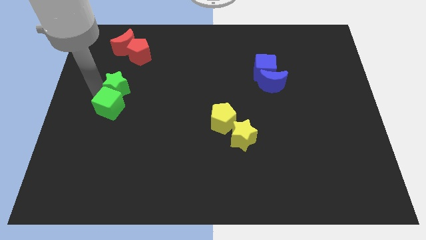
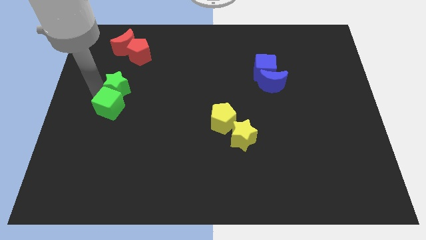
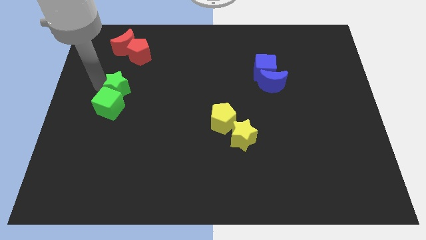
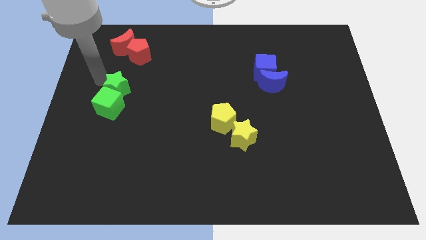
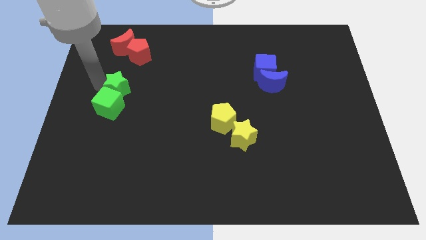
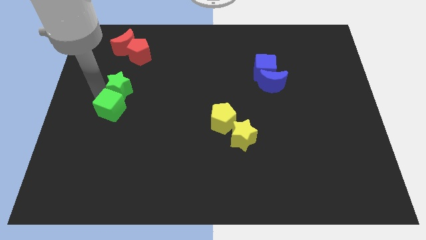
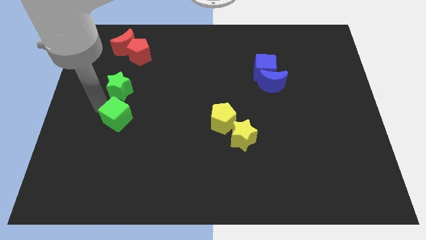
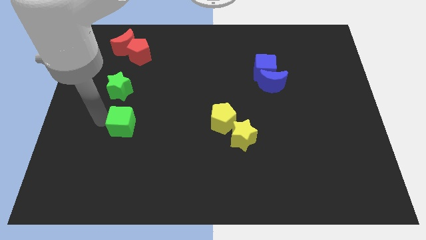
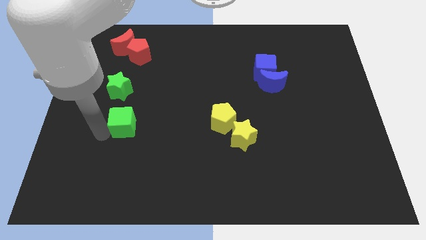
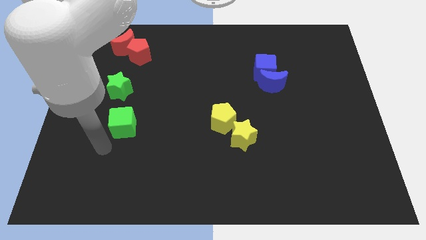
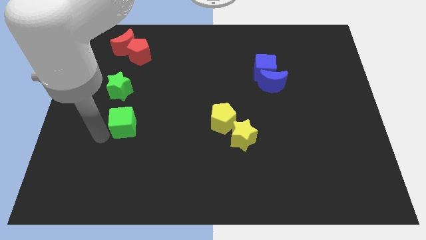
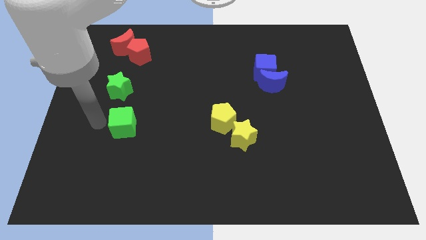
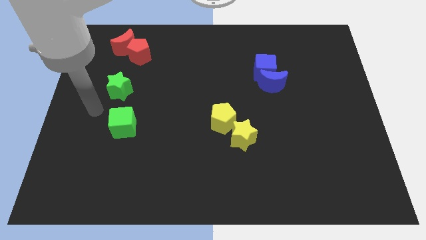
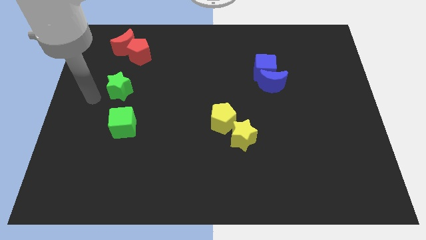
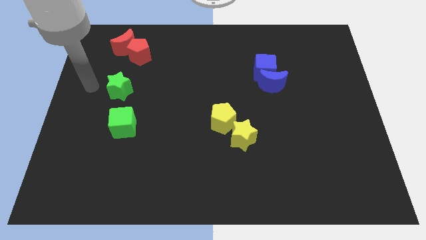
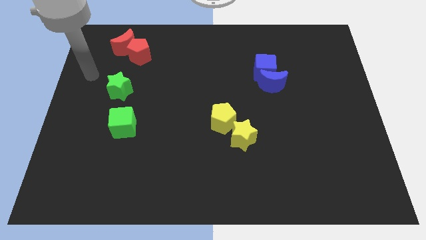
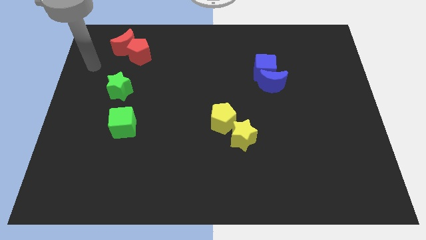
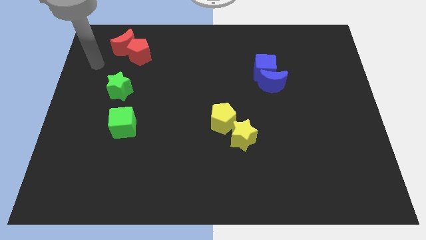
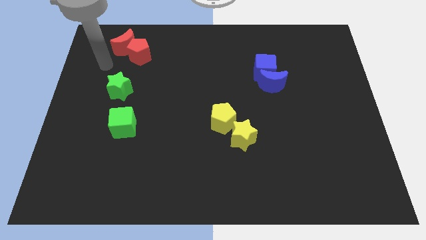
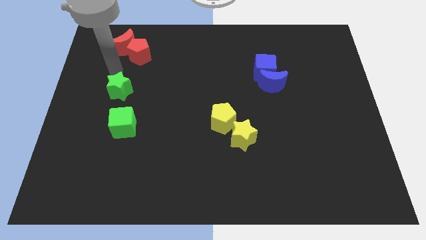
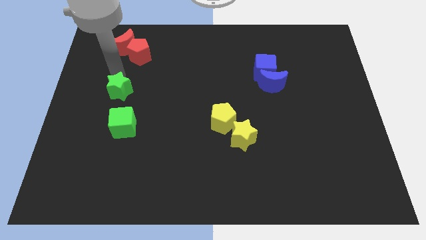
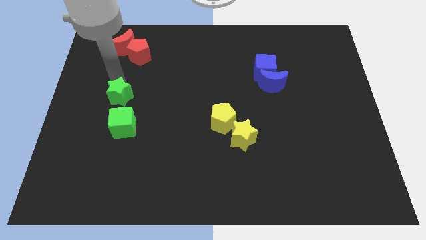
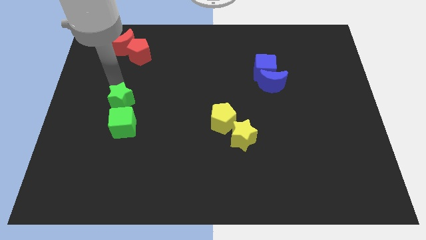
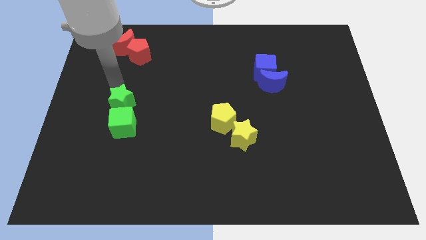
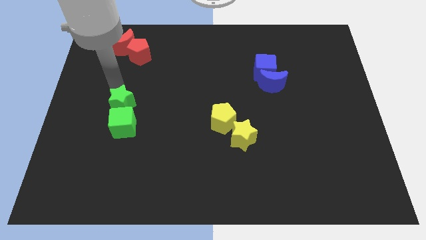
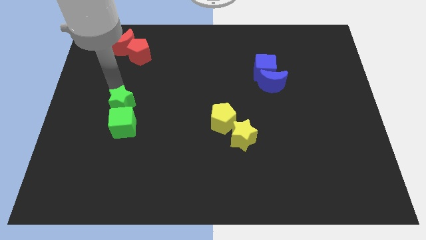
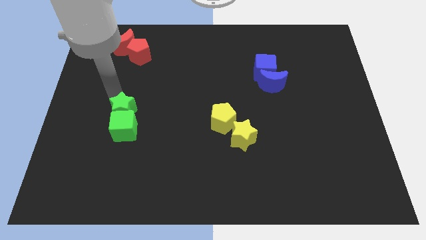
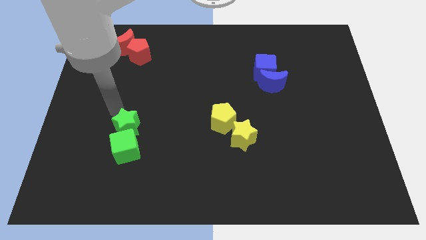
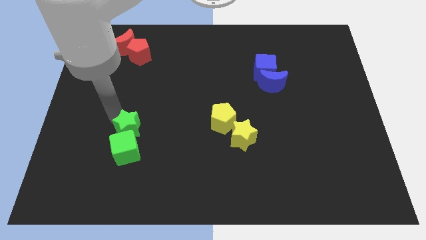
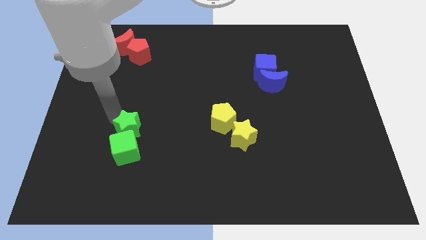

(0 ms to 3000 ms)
push the green cube using the green star to the bottom of the board

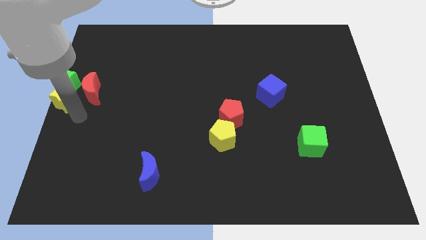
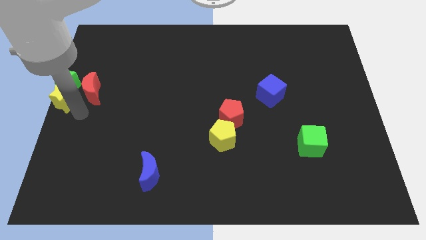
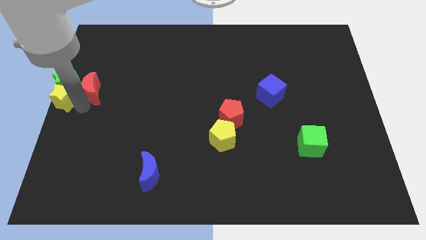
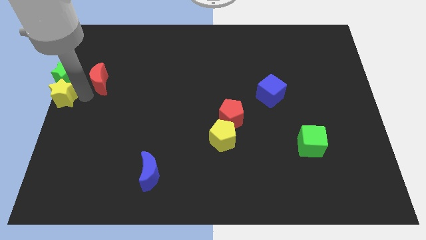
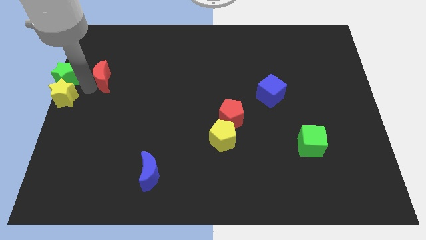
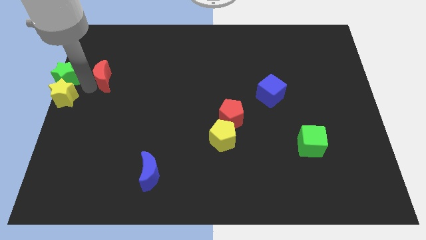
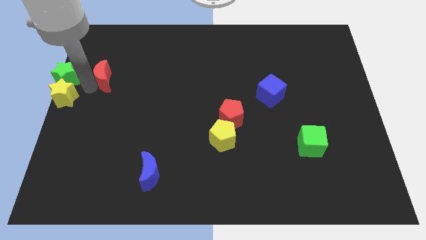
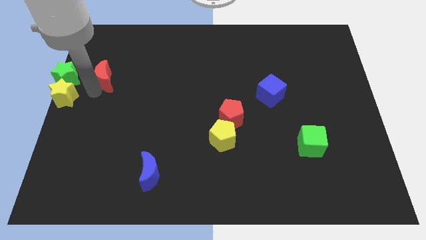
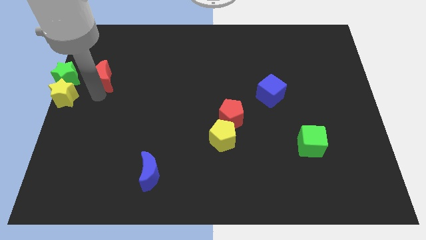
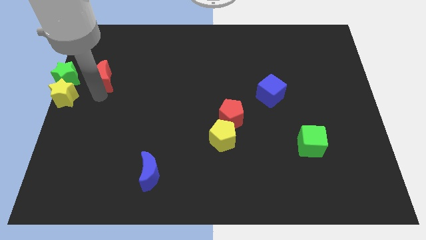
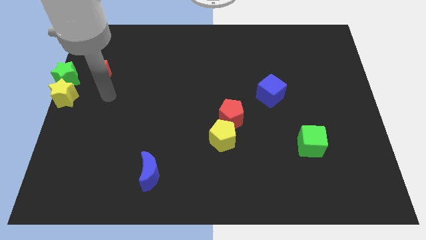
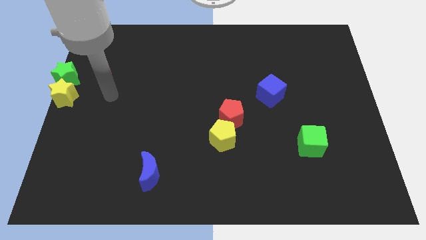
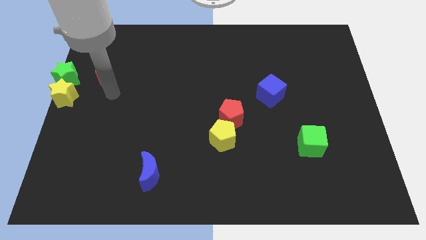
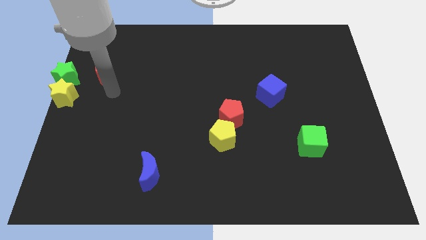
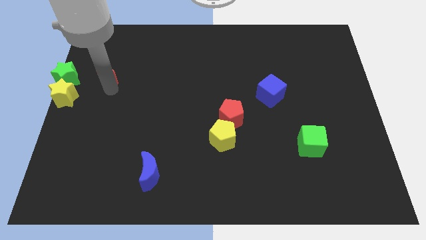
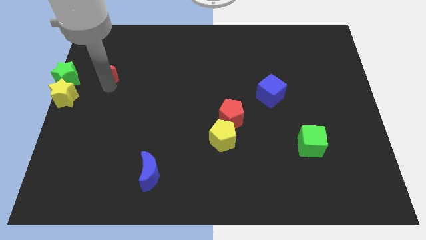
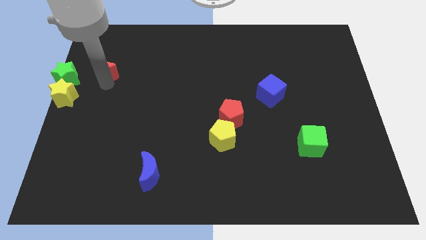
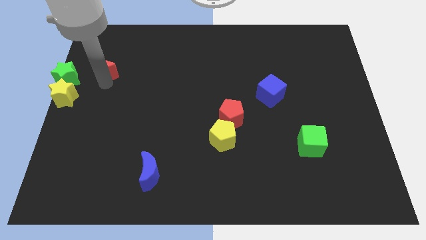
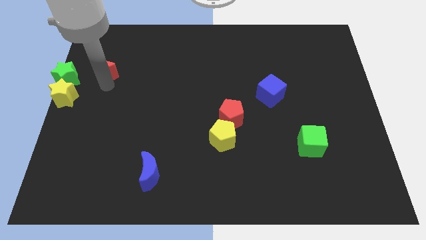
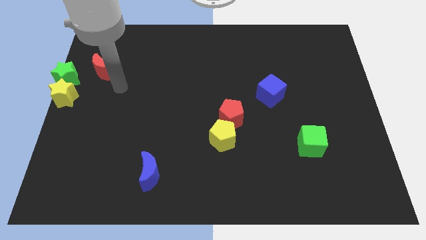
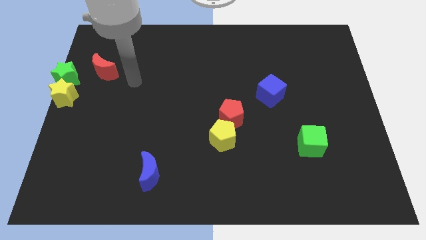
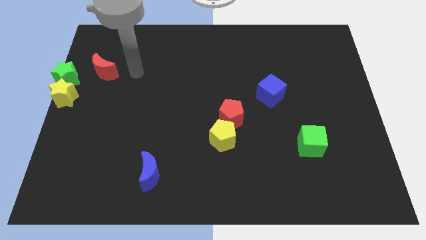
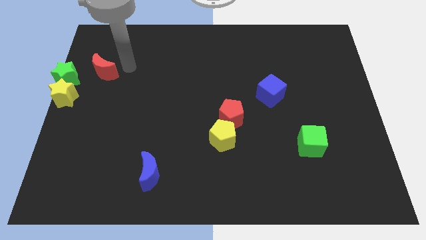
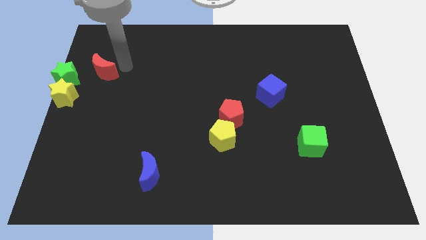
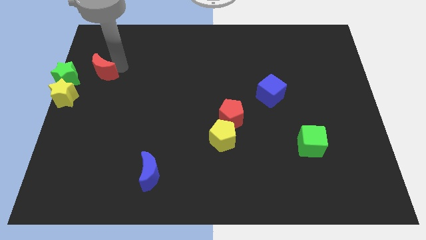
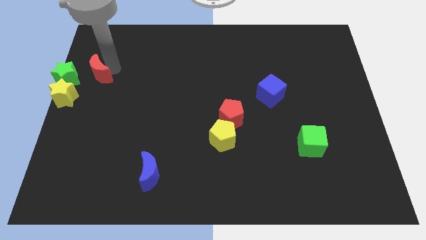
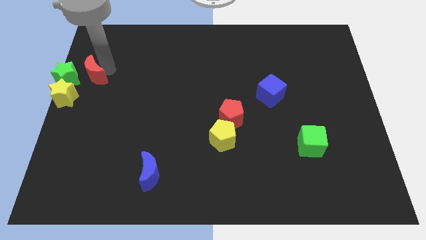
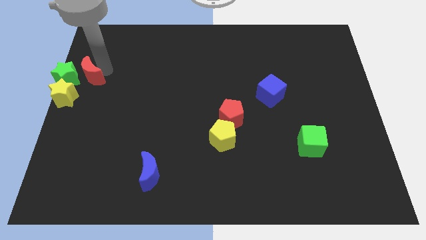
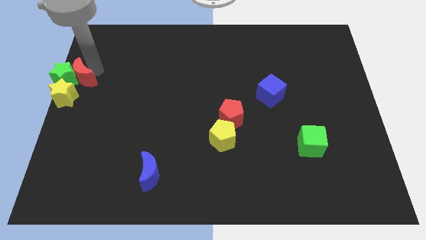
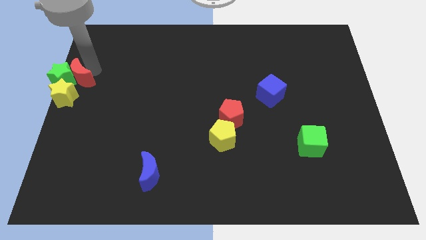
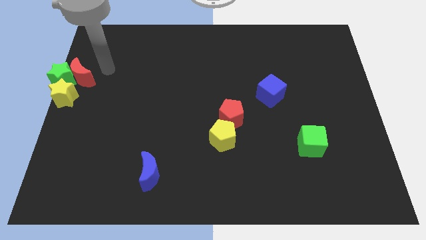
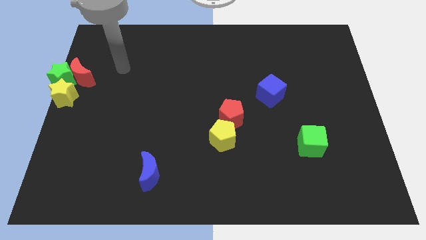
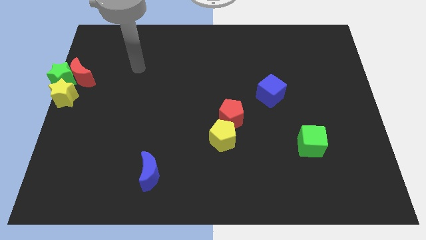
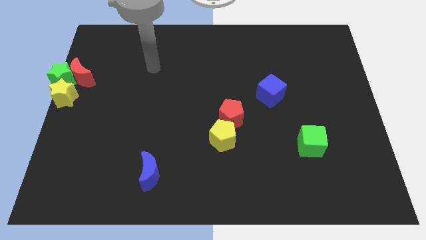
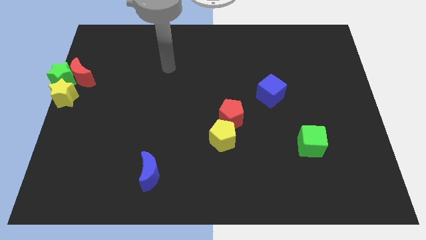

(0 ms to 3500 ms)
push the red crescent into the green star

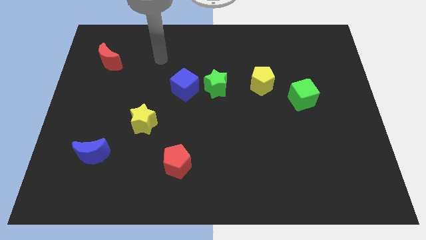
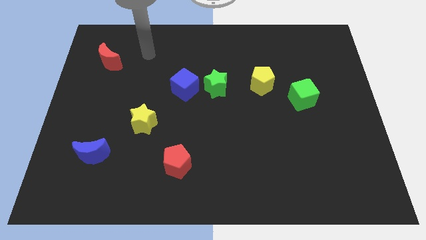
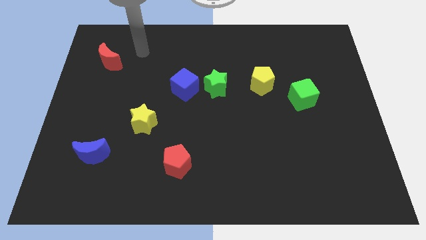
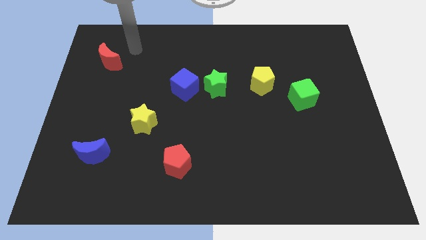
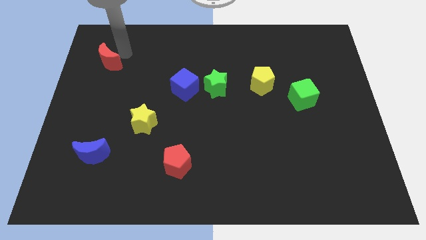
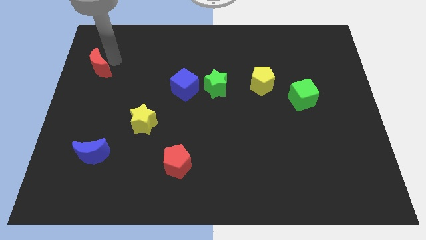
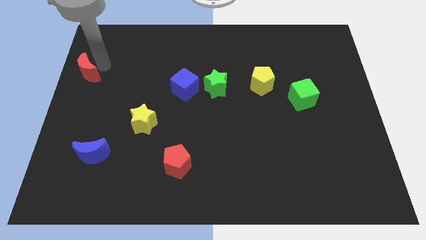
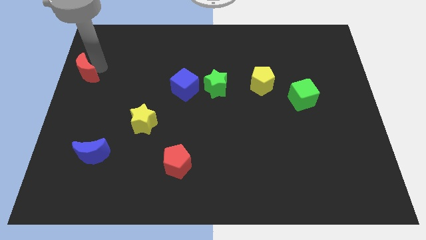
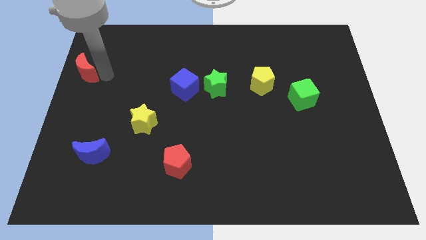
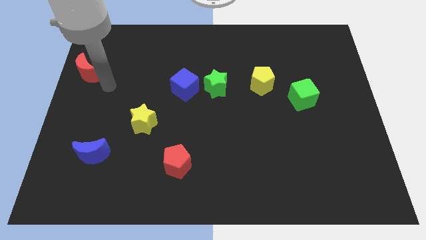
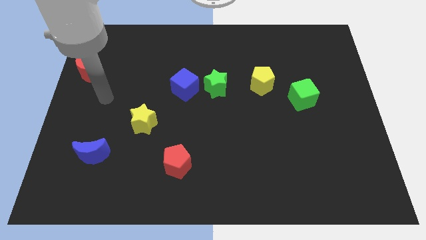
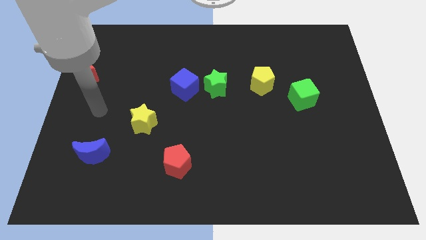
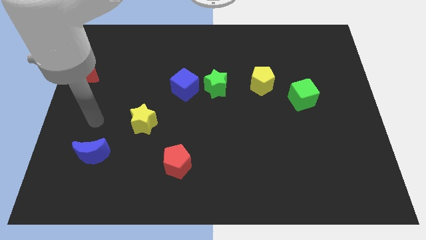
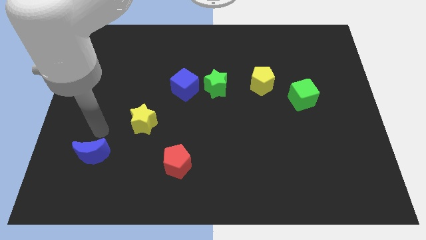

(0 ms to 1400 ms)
place the red moon parallel left to the blue cube

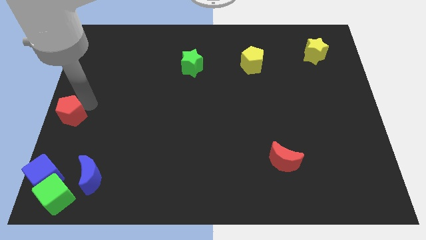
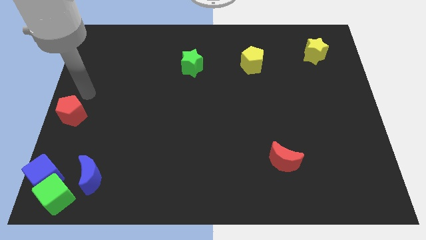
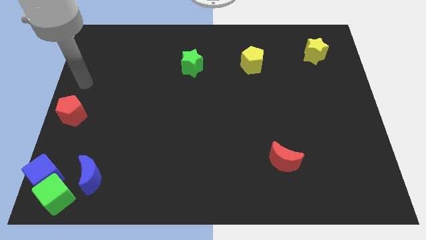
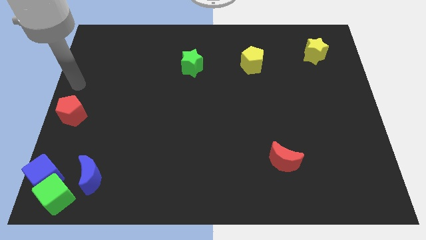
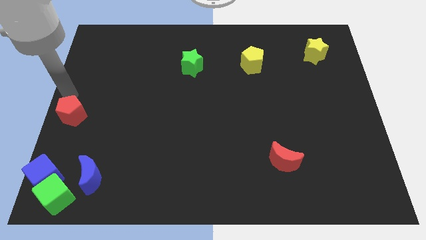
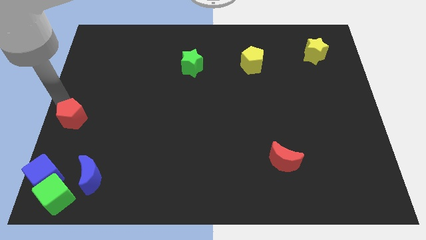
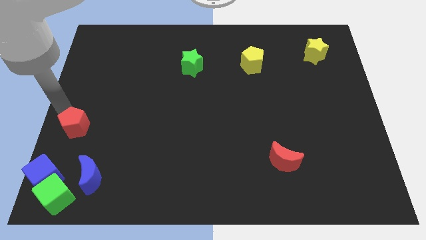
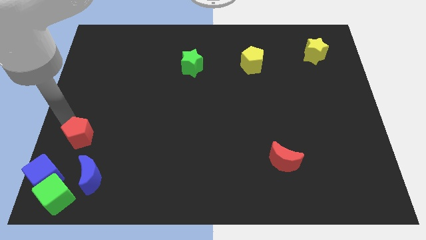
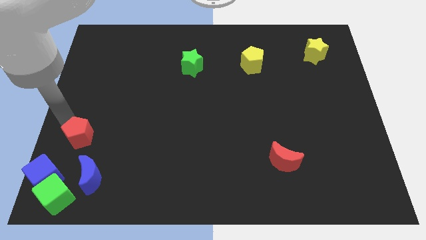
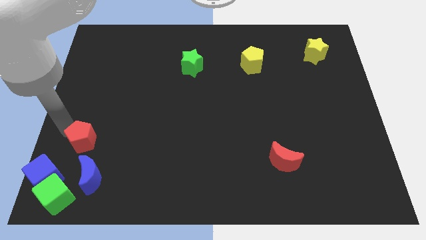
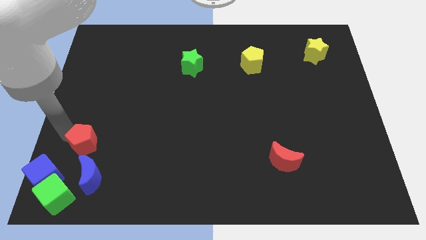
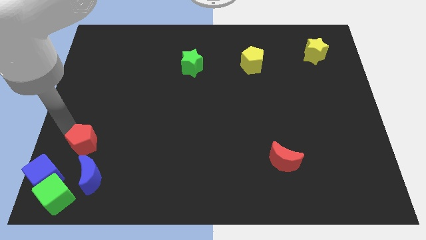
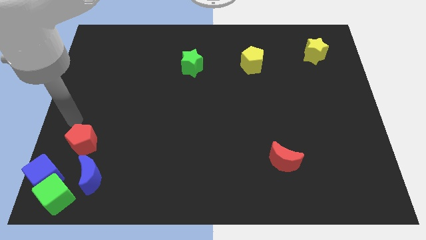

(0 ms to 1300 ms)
place the red pentagon at the top of the blue crescent
